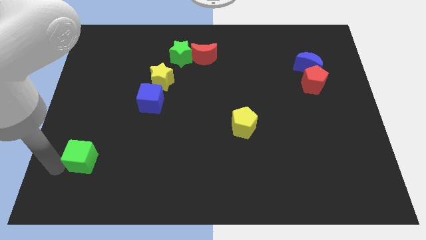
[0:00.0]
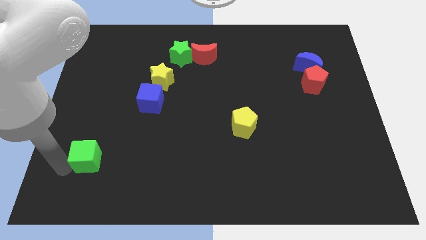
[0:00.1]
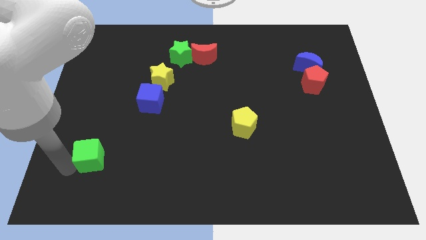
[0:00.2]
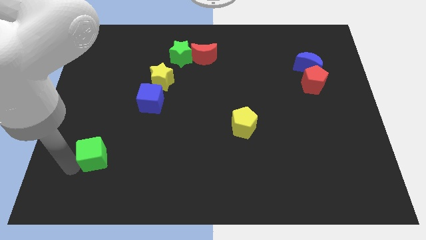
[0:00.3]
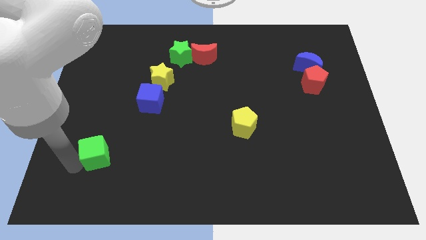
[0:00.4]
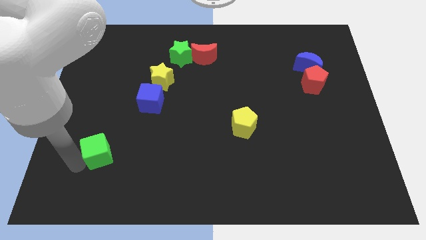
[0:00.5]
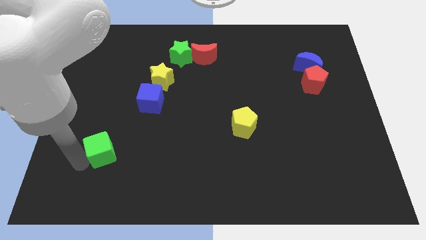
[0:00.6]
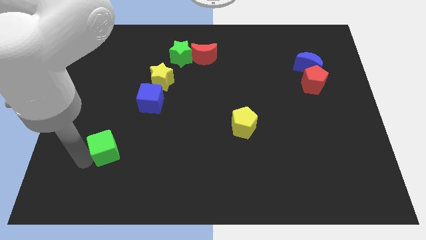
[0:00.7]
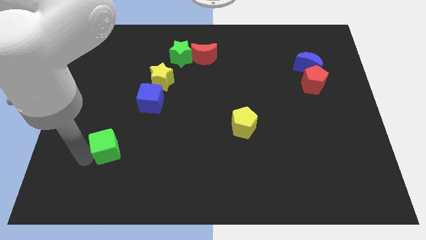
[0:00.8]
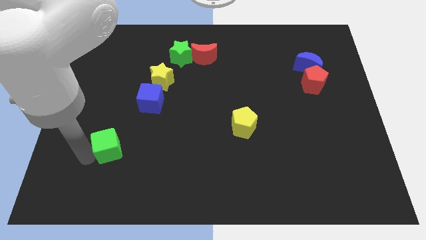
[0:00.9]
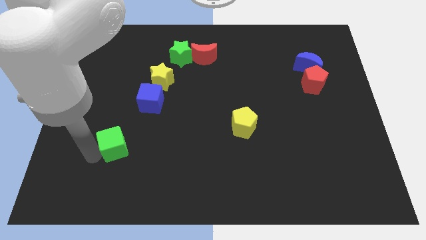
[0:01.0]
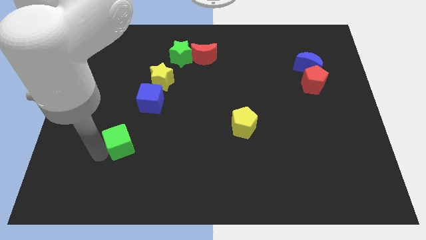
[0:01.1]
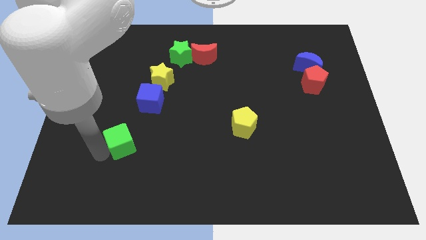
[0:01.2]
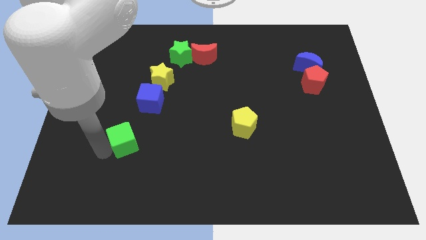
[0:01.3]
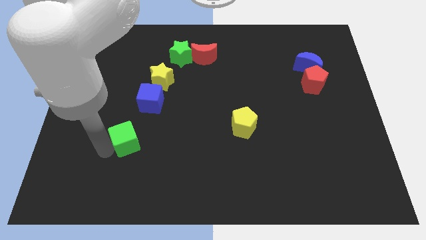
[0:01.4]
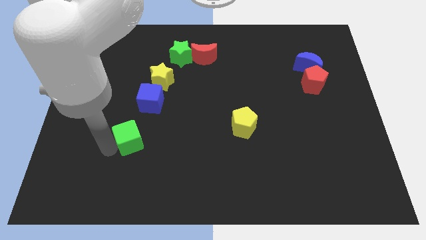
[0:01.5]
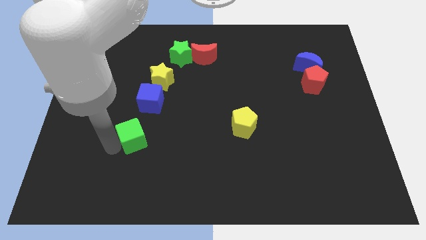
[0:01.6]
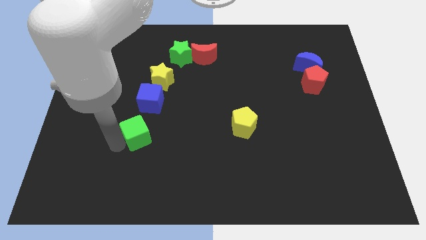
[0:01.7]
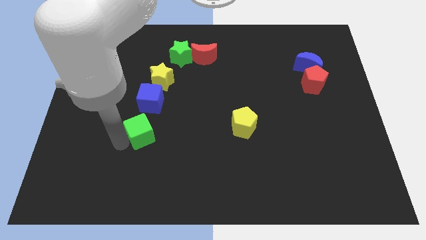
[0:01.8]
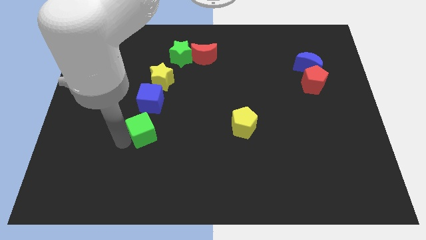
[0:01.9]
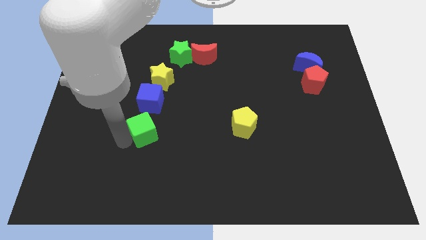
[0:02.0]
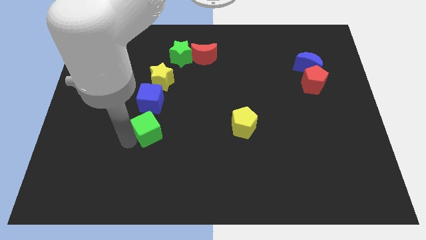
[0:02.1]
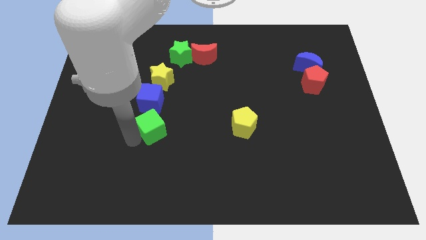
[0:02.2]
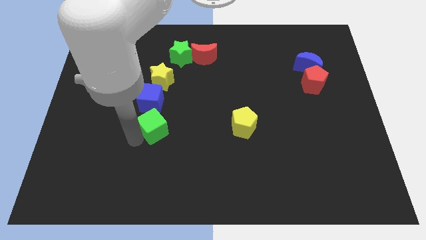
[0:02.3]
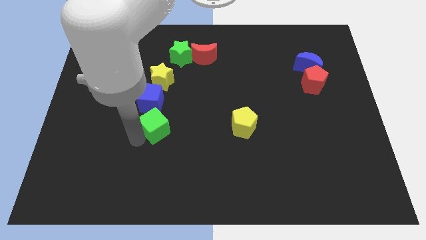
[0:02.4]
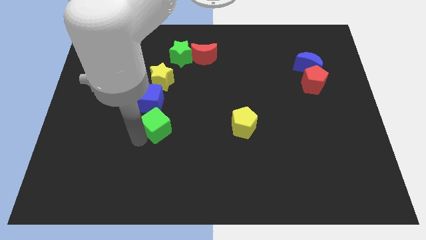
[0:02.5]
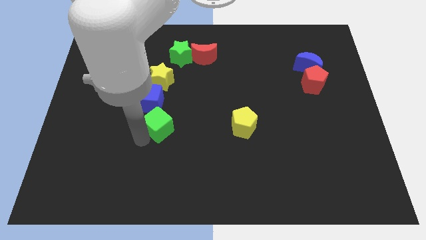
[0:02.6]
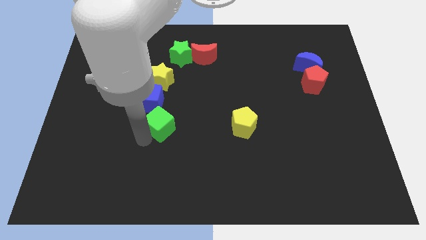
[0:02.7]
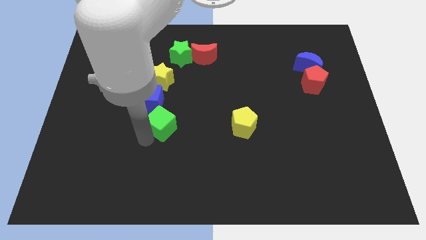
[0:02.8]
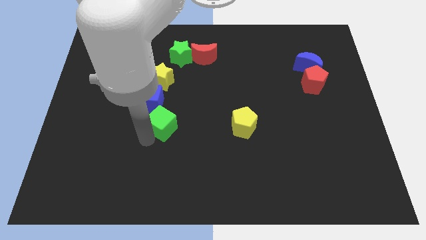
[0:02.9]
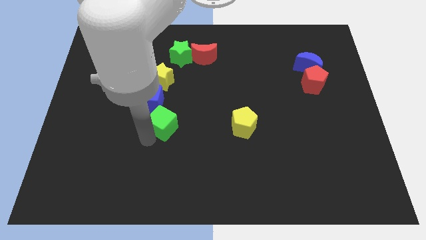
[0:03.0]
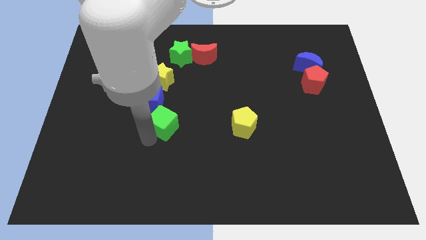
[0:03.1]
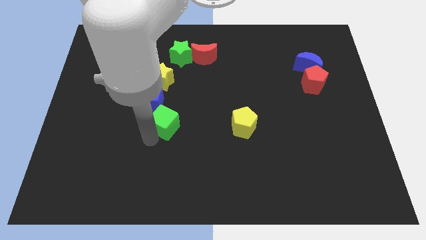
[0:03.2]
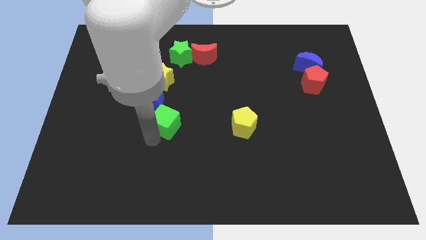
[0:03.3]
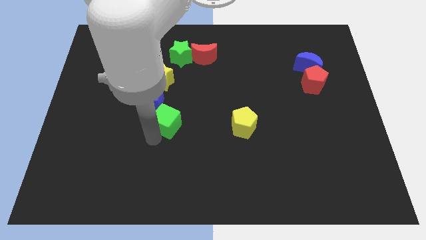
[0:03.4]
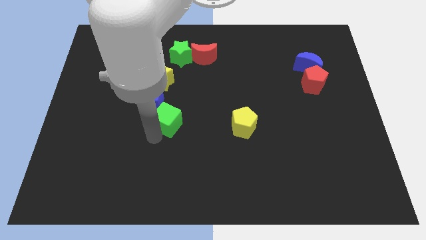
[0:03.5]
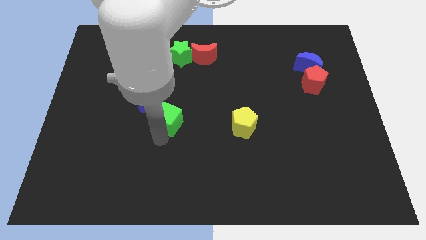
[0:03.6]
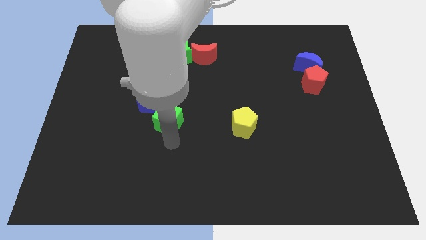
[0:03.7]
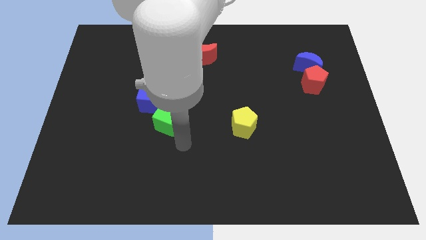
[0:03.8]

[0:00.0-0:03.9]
place the green cube diagonally to the right side of blue cube

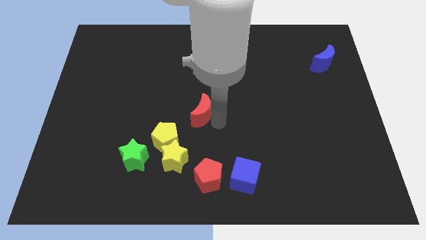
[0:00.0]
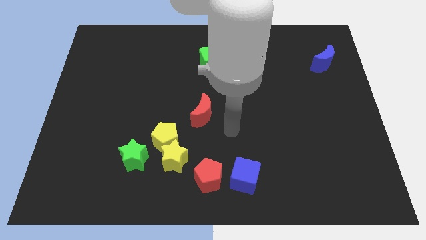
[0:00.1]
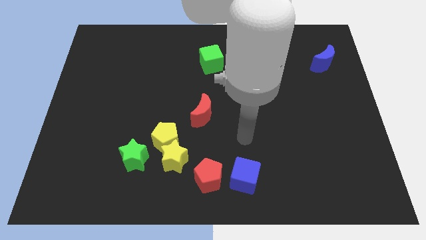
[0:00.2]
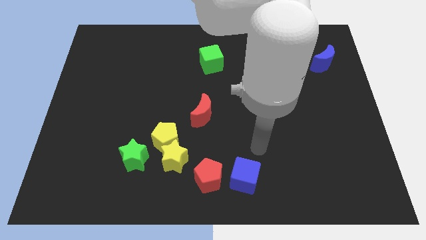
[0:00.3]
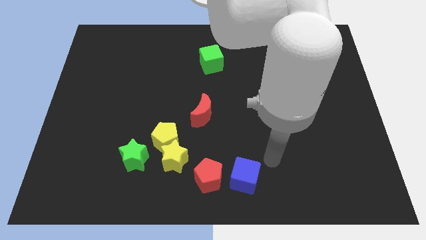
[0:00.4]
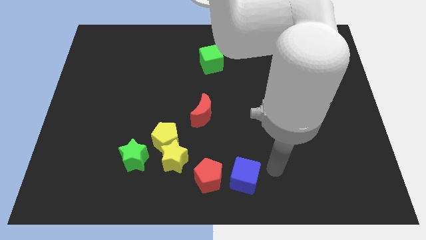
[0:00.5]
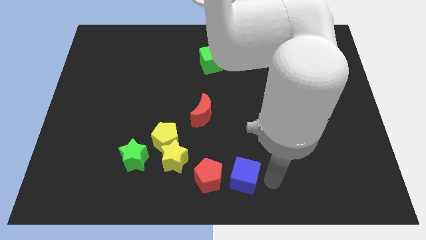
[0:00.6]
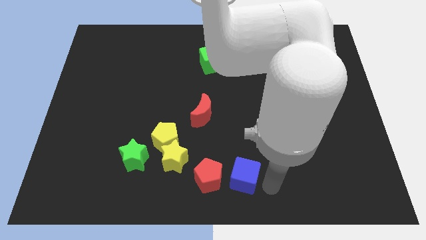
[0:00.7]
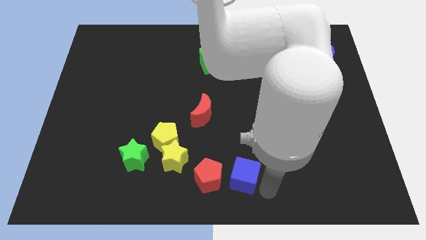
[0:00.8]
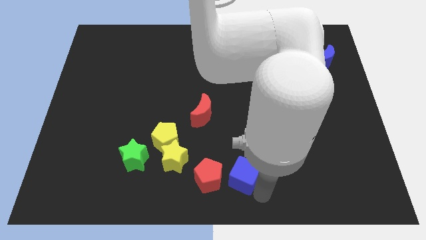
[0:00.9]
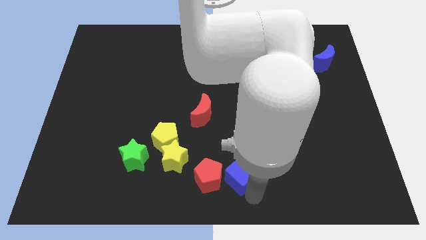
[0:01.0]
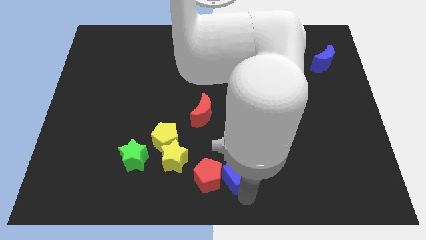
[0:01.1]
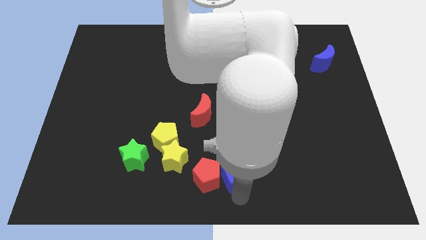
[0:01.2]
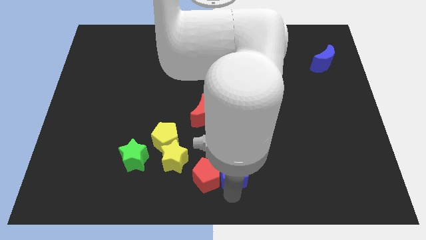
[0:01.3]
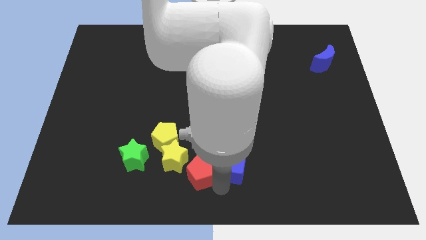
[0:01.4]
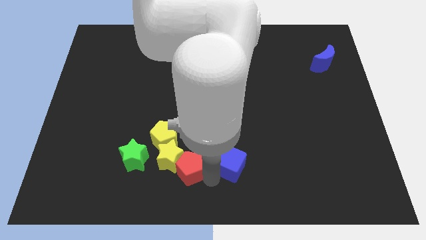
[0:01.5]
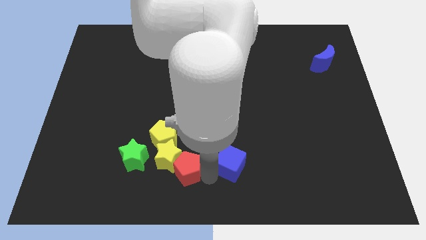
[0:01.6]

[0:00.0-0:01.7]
move red pentagon into yellow star along with blue cube

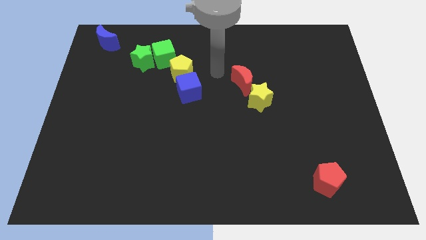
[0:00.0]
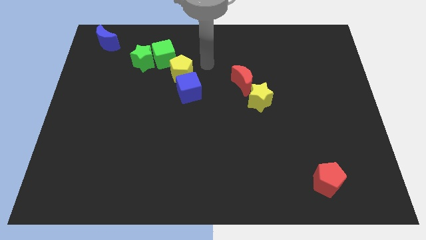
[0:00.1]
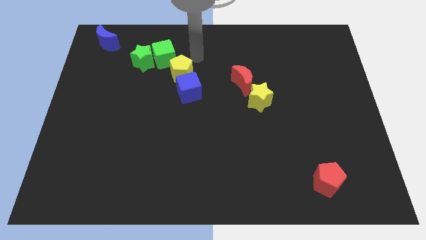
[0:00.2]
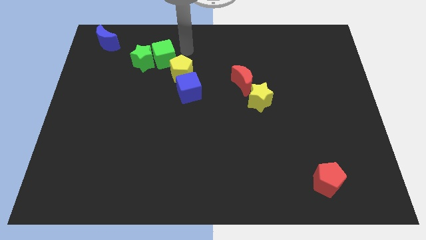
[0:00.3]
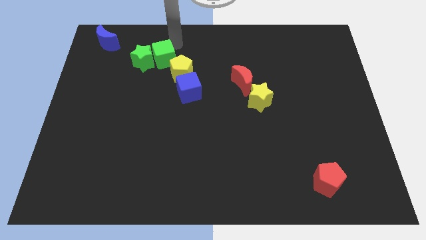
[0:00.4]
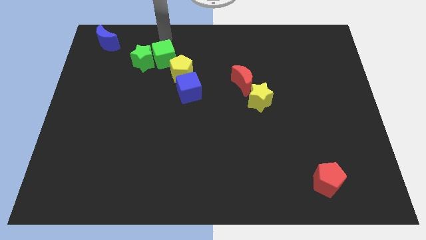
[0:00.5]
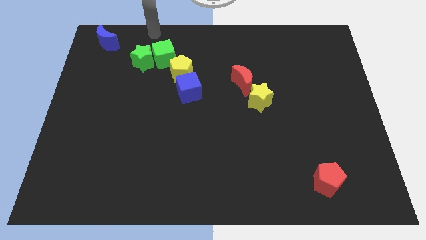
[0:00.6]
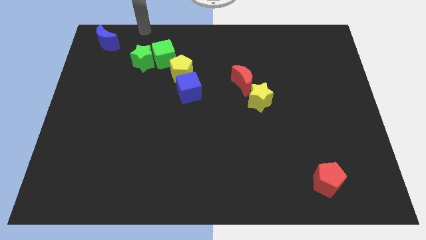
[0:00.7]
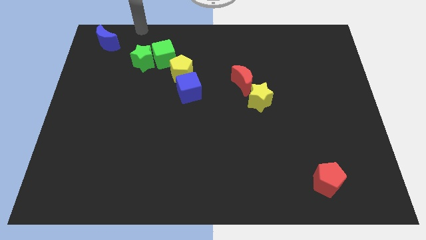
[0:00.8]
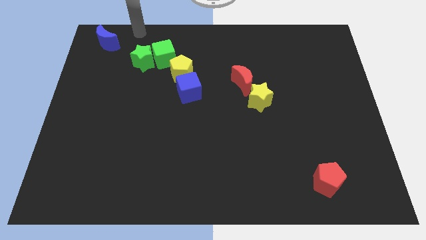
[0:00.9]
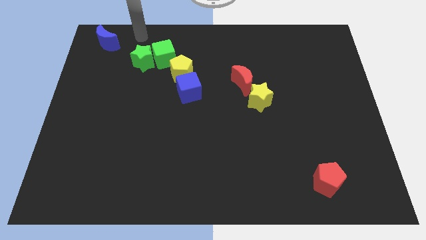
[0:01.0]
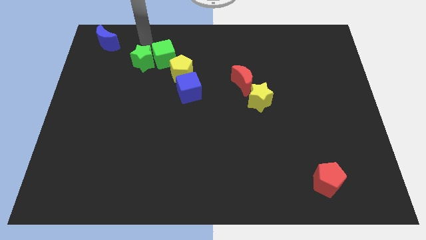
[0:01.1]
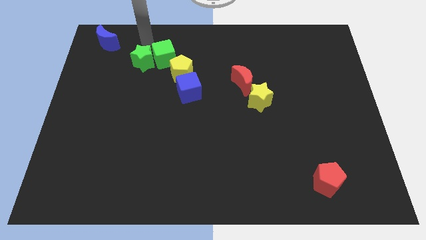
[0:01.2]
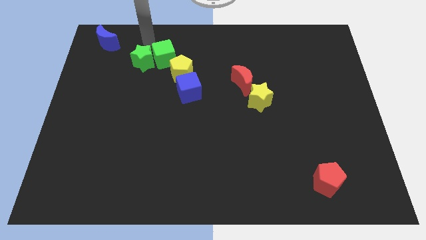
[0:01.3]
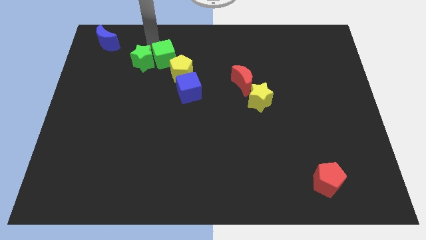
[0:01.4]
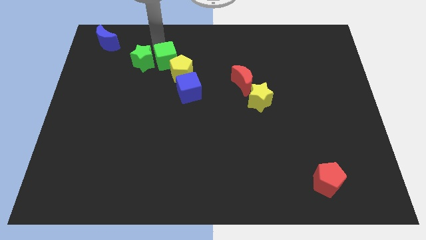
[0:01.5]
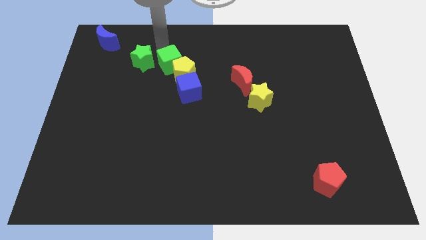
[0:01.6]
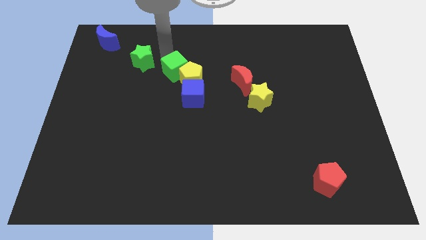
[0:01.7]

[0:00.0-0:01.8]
push the green cube into yellow pentagon

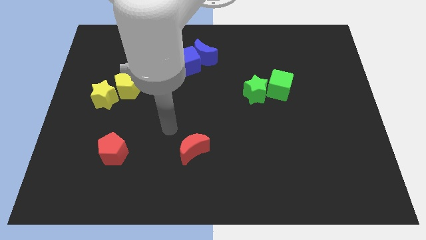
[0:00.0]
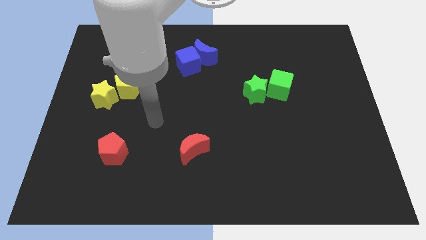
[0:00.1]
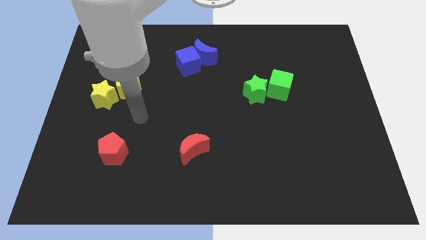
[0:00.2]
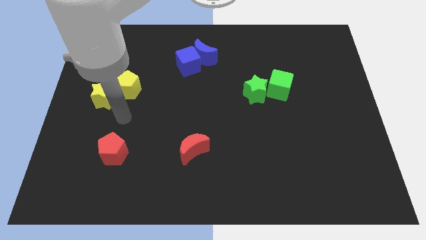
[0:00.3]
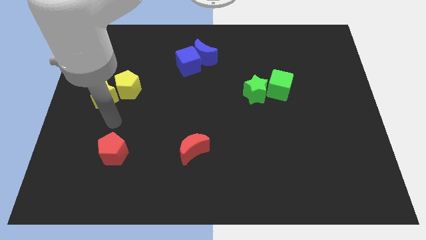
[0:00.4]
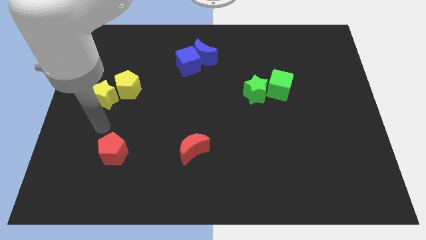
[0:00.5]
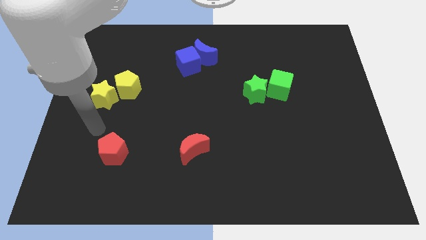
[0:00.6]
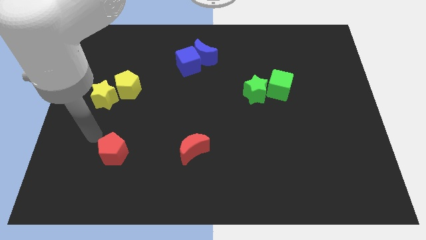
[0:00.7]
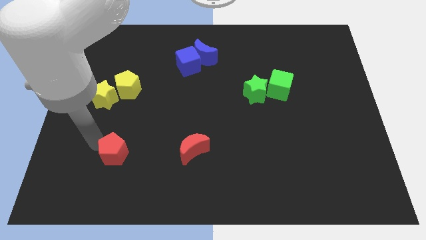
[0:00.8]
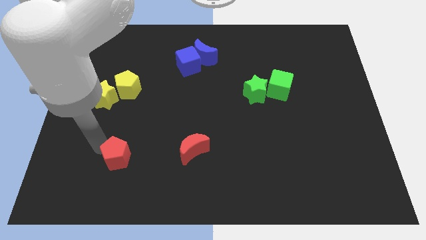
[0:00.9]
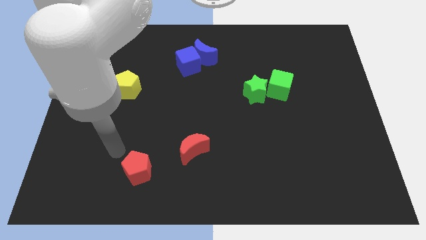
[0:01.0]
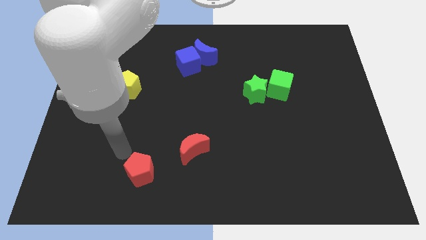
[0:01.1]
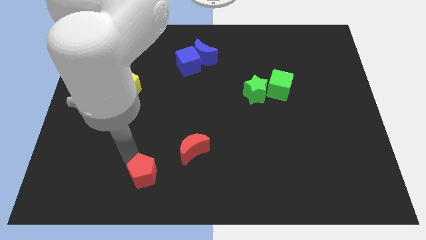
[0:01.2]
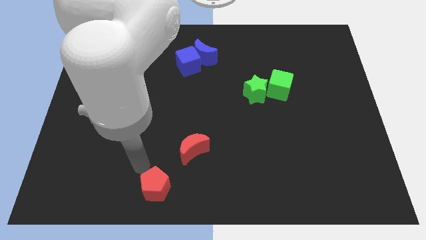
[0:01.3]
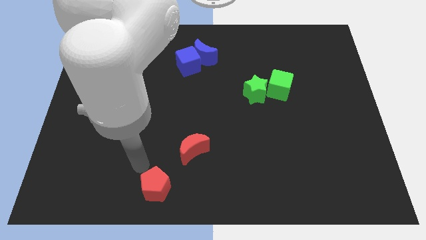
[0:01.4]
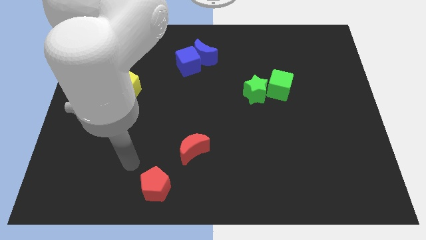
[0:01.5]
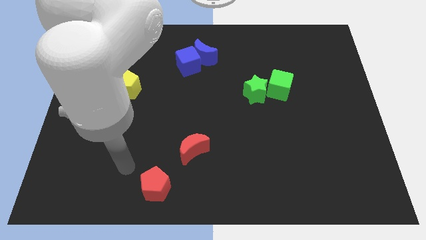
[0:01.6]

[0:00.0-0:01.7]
slide the red pentagon diagonally on the bottom left side of the red moon
